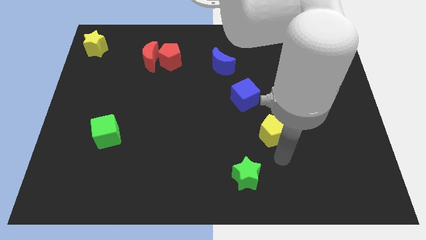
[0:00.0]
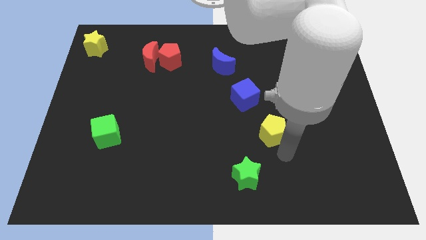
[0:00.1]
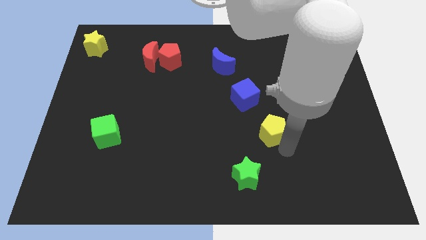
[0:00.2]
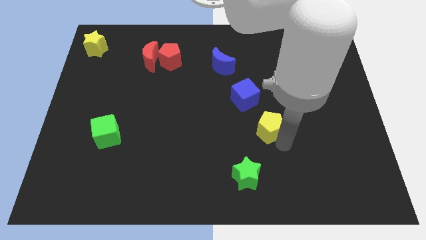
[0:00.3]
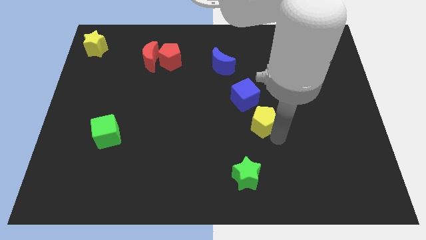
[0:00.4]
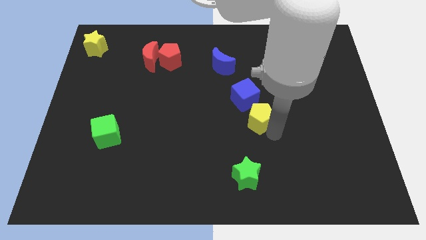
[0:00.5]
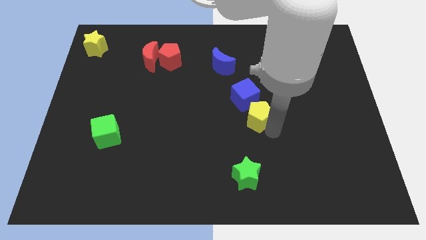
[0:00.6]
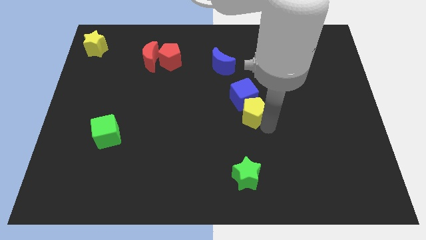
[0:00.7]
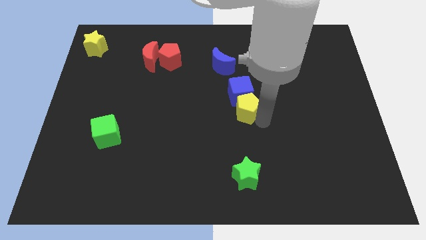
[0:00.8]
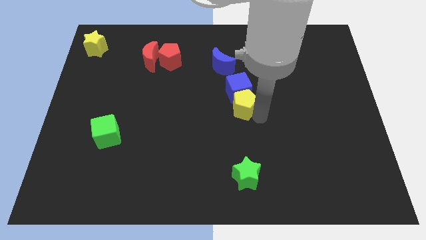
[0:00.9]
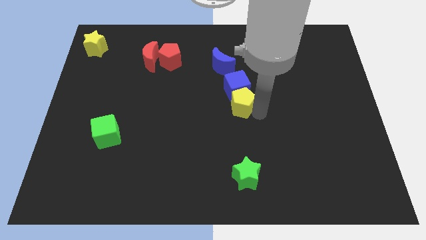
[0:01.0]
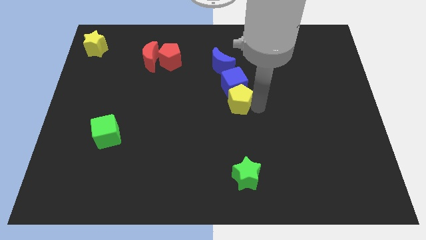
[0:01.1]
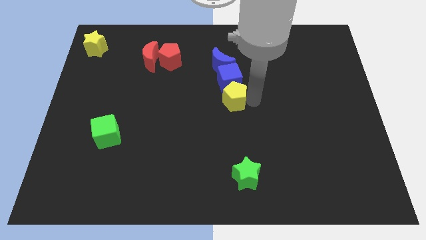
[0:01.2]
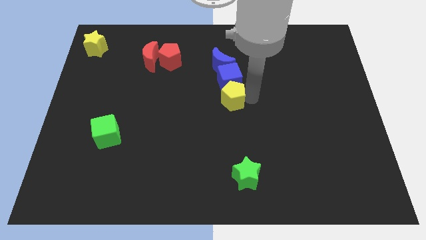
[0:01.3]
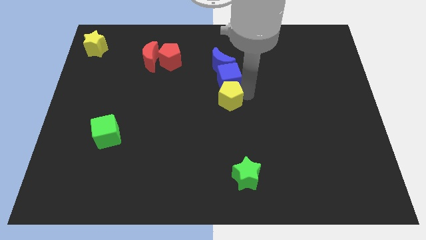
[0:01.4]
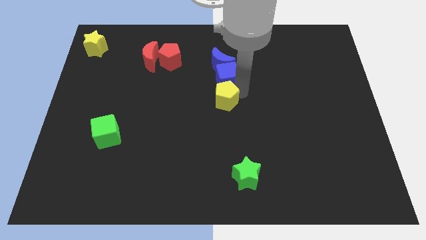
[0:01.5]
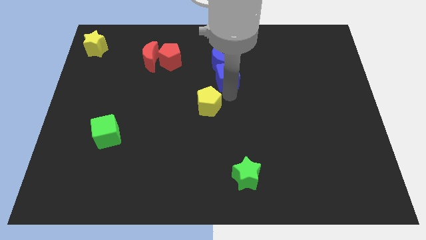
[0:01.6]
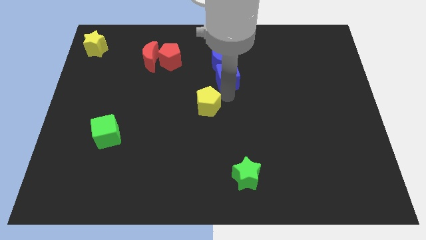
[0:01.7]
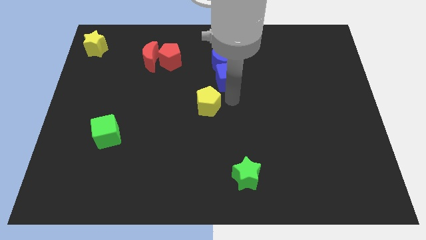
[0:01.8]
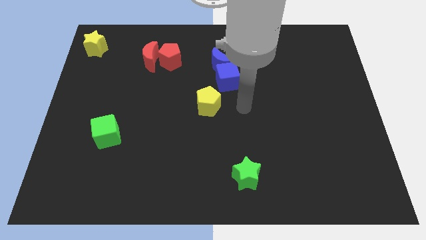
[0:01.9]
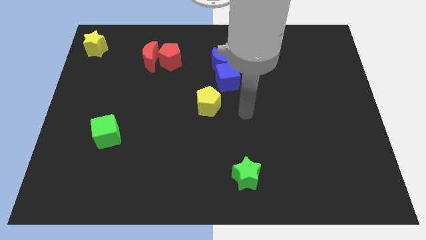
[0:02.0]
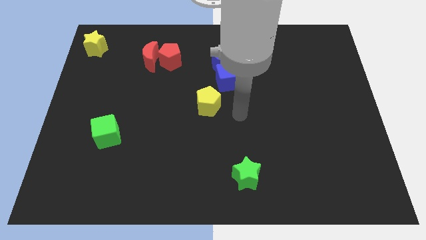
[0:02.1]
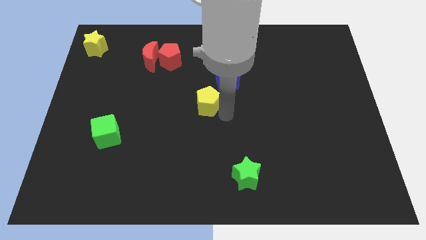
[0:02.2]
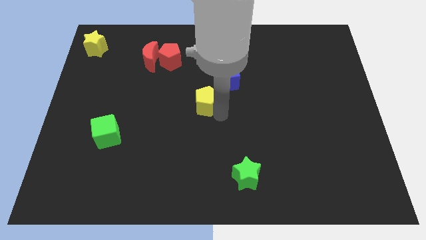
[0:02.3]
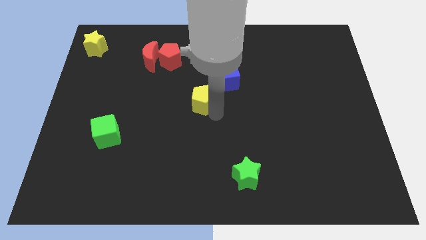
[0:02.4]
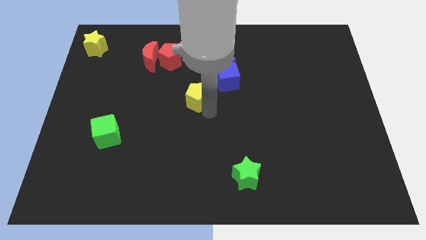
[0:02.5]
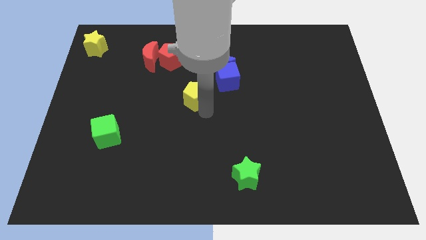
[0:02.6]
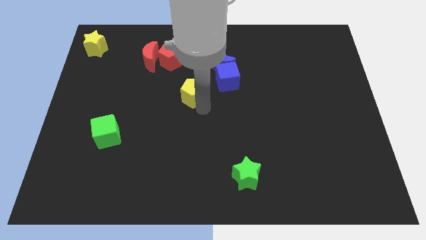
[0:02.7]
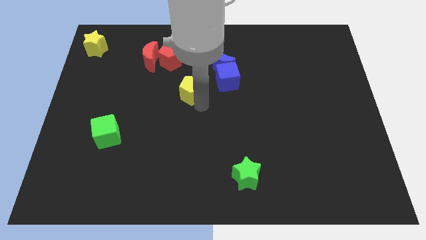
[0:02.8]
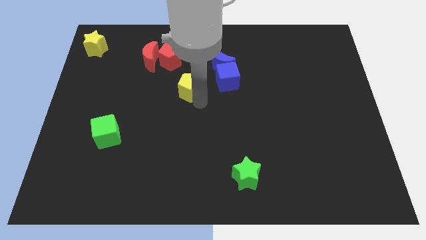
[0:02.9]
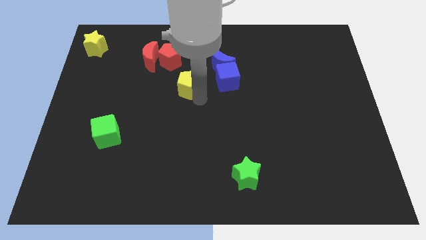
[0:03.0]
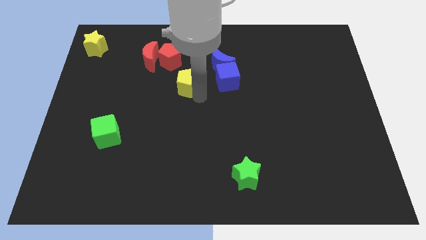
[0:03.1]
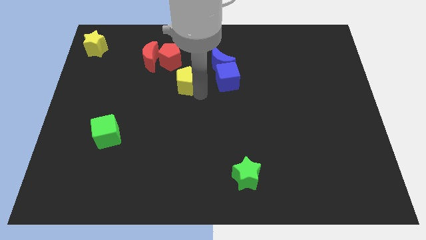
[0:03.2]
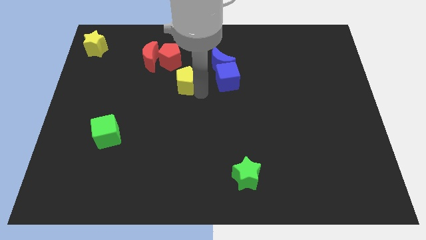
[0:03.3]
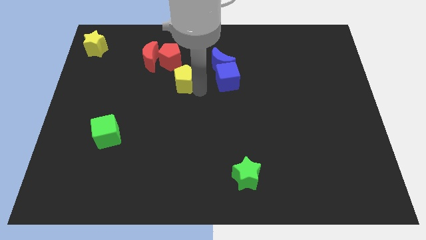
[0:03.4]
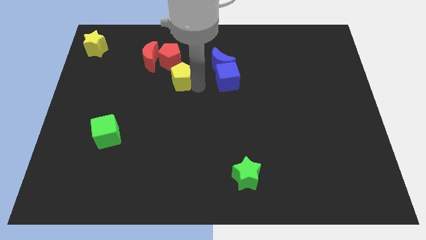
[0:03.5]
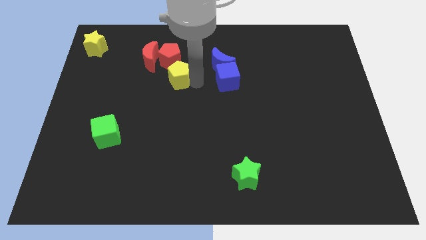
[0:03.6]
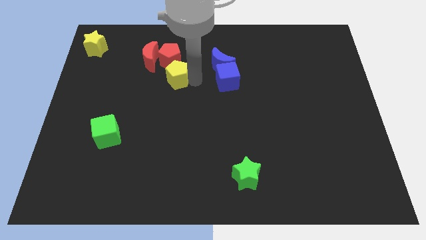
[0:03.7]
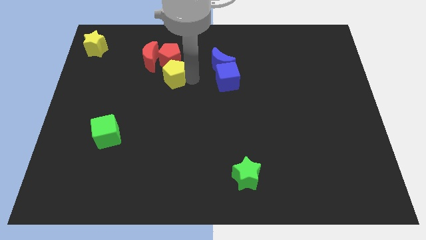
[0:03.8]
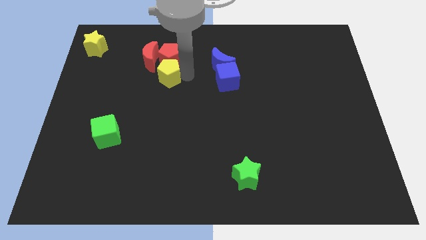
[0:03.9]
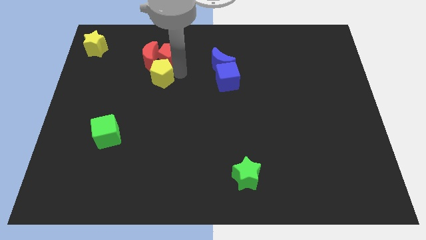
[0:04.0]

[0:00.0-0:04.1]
place yellow pentagon below red pentagon

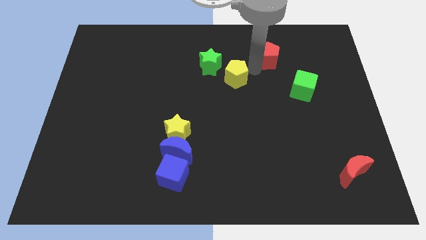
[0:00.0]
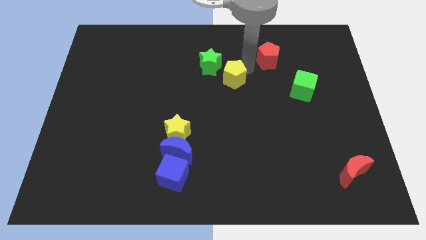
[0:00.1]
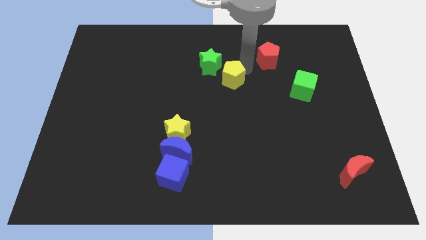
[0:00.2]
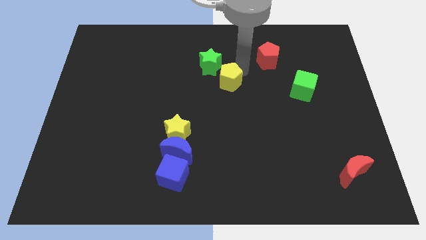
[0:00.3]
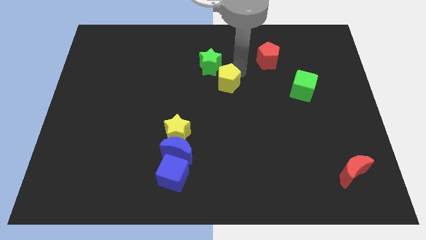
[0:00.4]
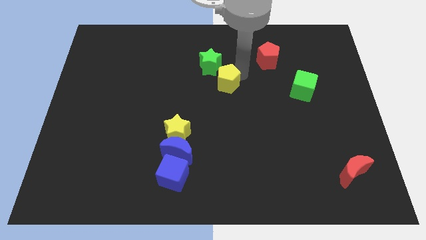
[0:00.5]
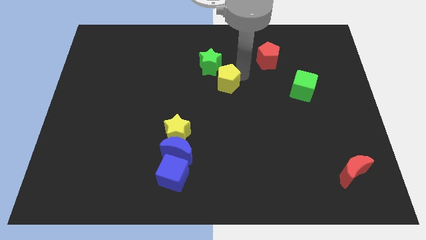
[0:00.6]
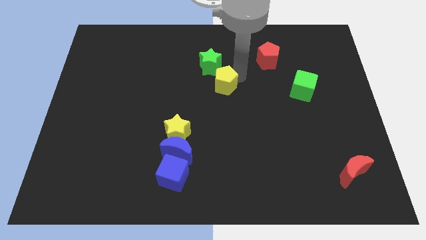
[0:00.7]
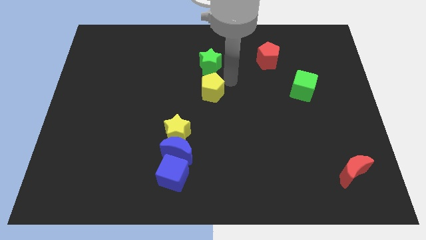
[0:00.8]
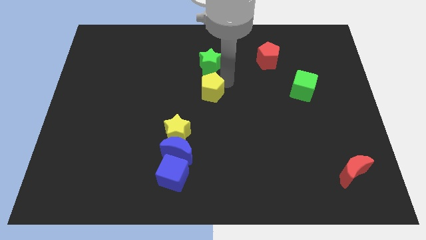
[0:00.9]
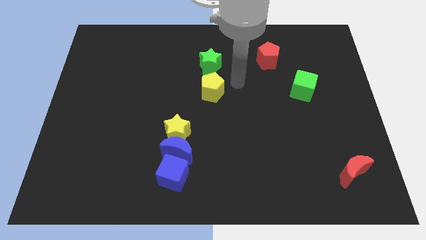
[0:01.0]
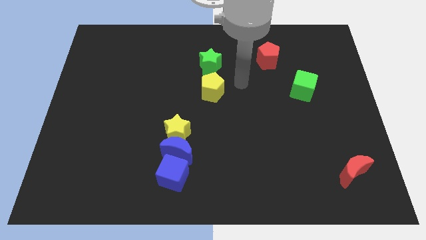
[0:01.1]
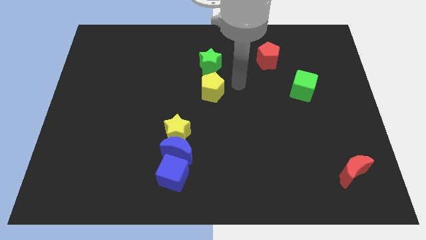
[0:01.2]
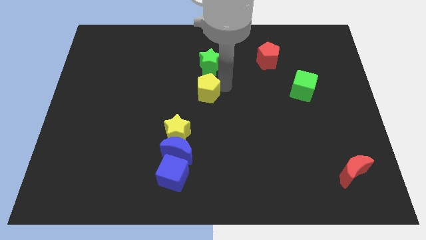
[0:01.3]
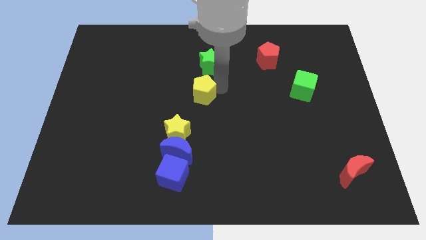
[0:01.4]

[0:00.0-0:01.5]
push the yellow pentagon towards the left side of the board

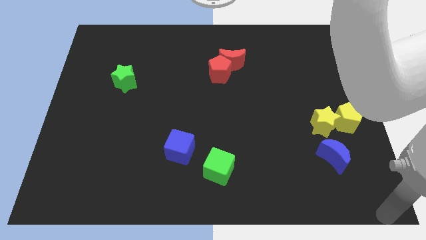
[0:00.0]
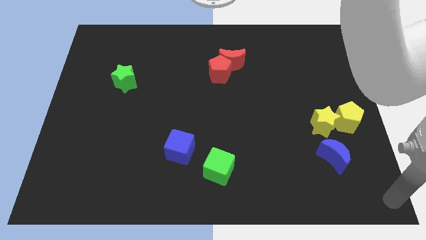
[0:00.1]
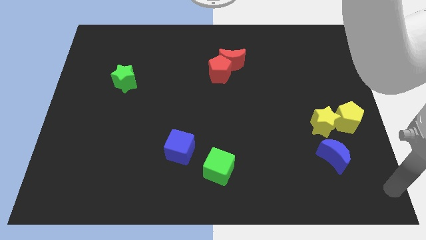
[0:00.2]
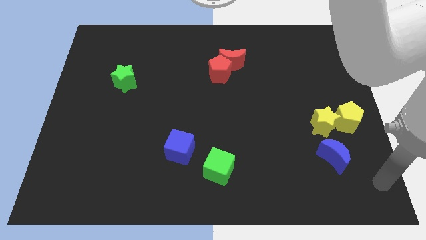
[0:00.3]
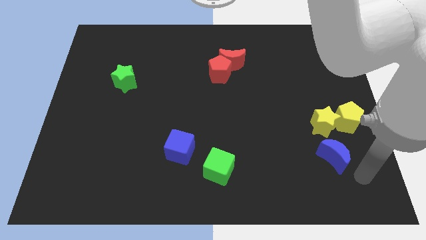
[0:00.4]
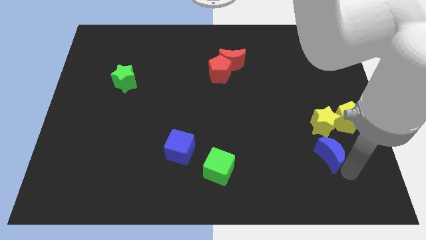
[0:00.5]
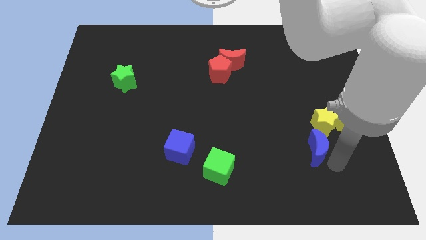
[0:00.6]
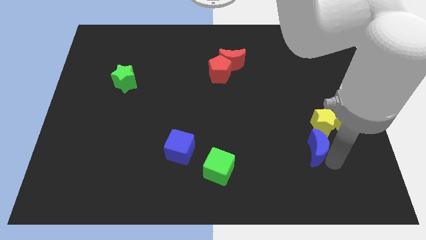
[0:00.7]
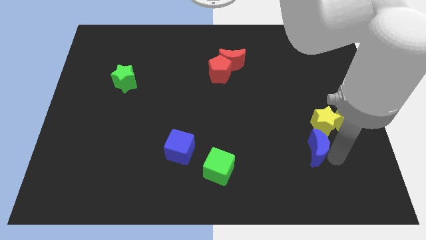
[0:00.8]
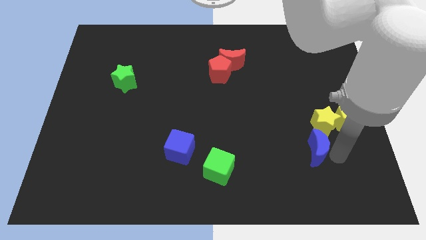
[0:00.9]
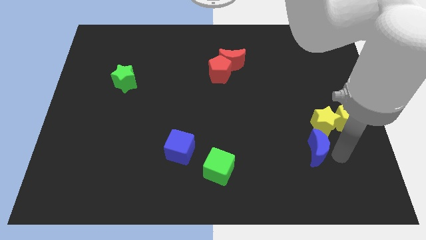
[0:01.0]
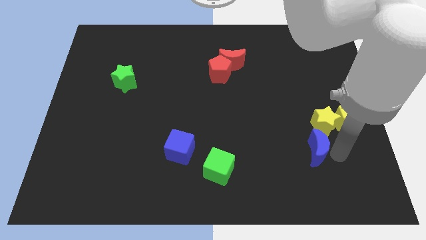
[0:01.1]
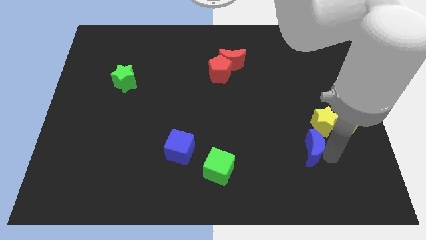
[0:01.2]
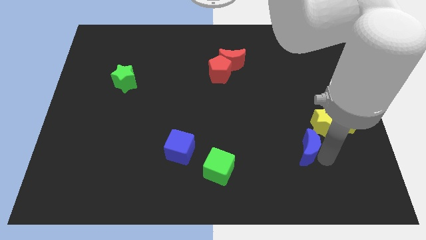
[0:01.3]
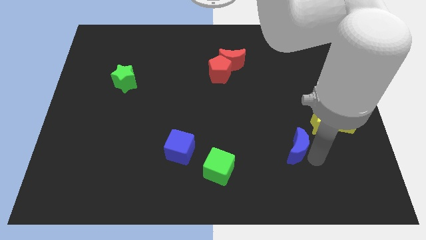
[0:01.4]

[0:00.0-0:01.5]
move your arm into the blue crescent

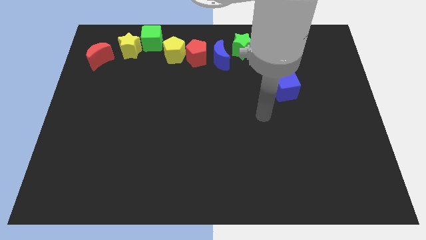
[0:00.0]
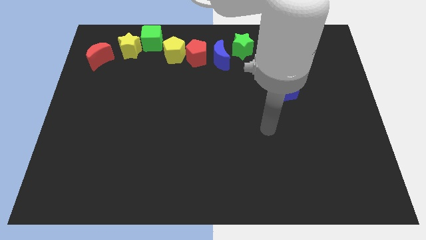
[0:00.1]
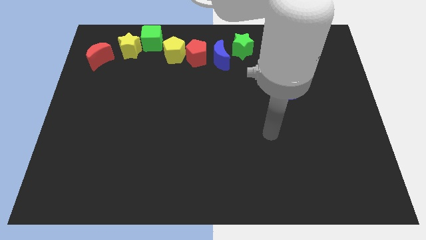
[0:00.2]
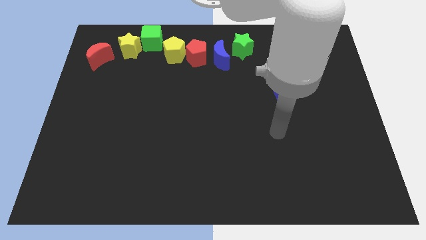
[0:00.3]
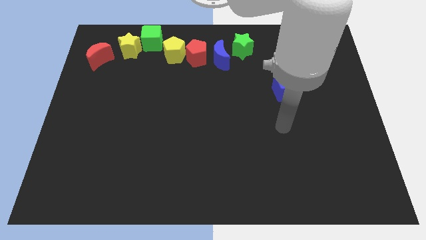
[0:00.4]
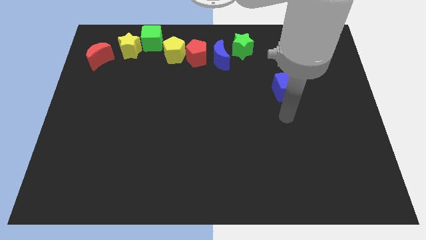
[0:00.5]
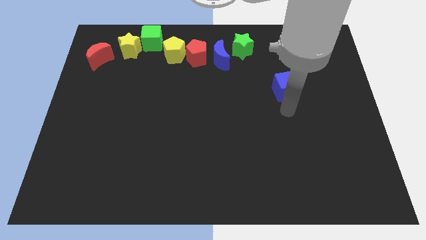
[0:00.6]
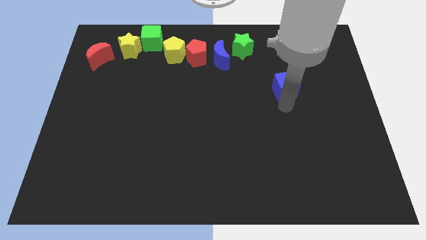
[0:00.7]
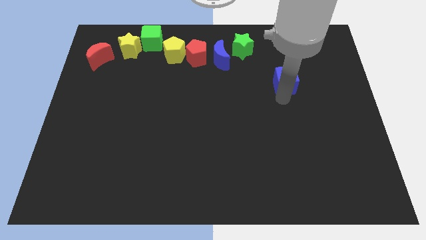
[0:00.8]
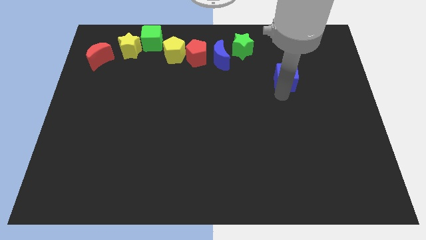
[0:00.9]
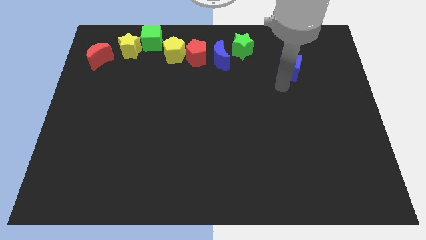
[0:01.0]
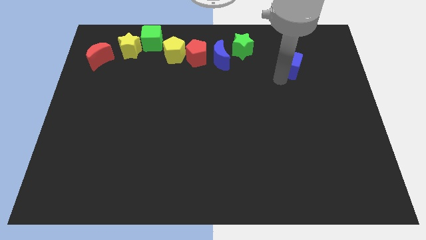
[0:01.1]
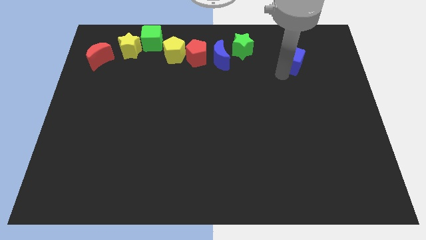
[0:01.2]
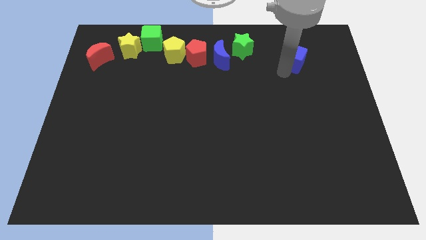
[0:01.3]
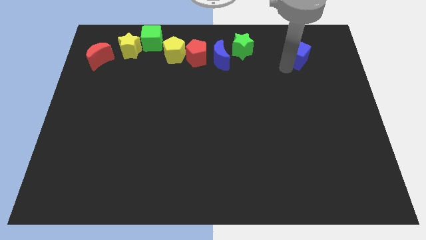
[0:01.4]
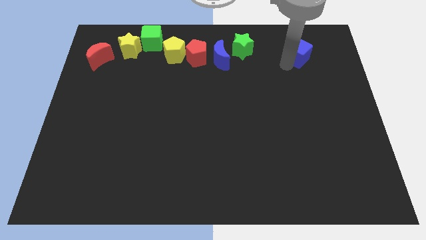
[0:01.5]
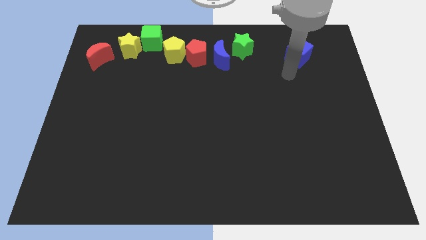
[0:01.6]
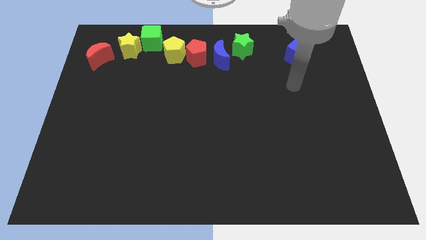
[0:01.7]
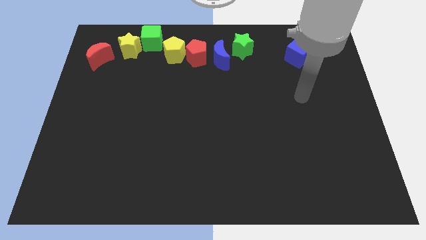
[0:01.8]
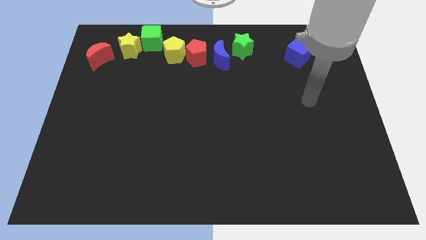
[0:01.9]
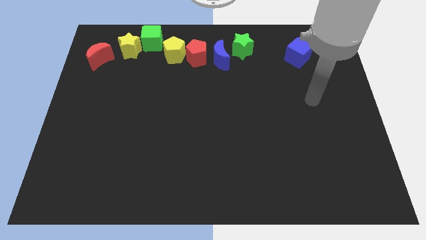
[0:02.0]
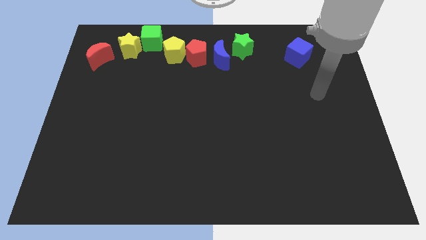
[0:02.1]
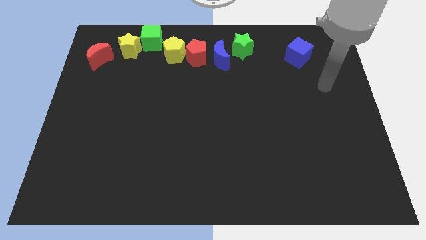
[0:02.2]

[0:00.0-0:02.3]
place the blue cube parallel to green star
